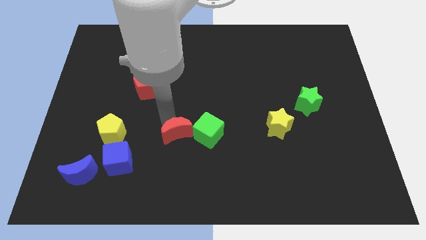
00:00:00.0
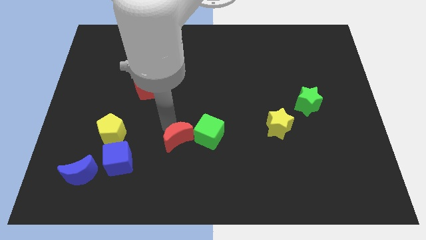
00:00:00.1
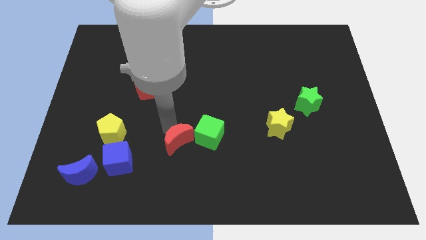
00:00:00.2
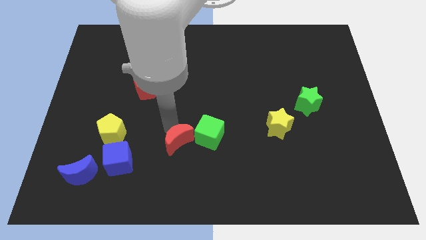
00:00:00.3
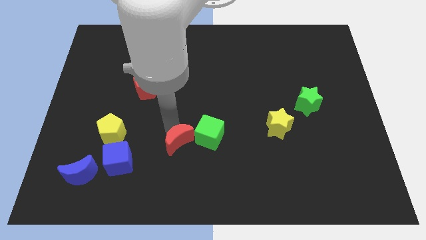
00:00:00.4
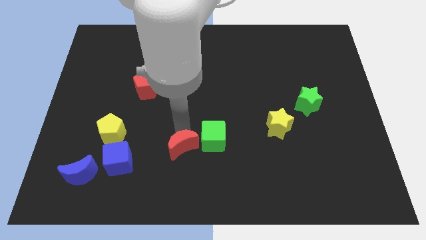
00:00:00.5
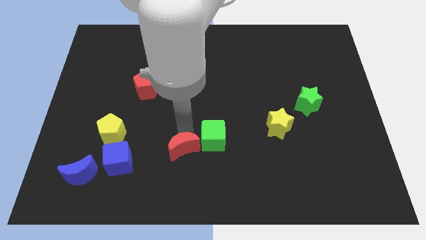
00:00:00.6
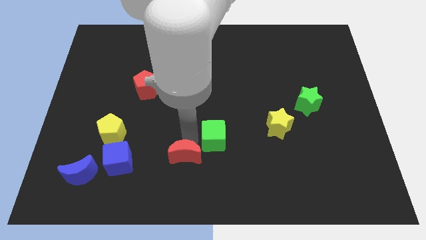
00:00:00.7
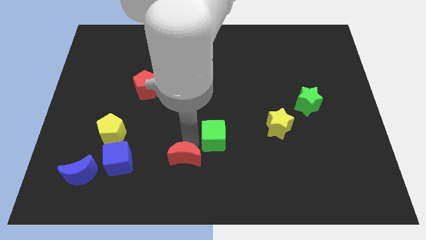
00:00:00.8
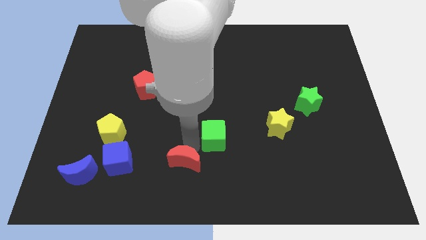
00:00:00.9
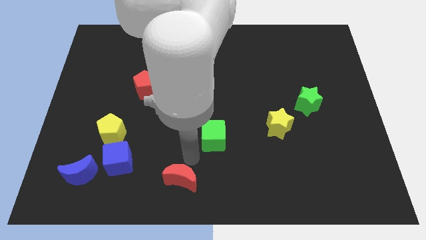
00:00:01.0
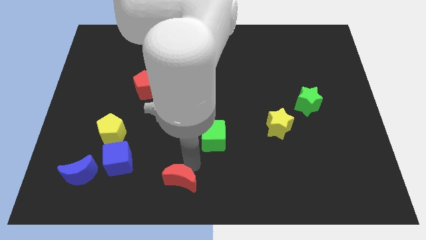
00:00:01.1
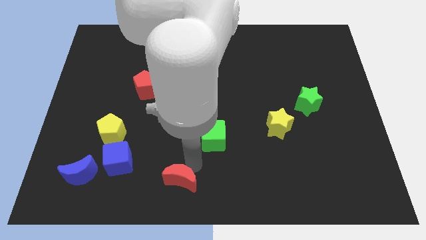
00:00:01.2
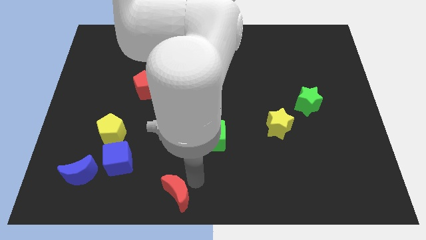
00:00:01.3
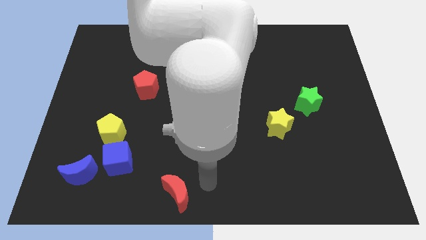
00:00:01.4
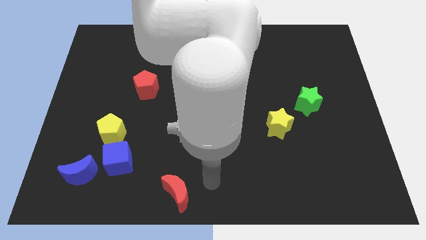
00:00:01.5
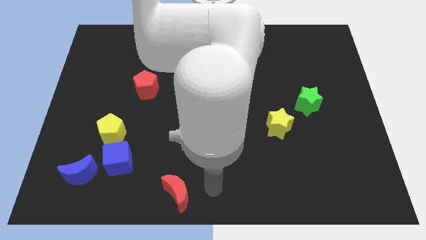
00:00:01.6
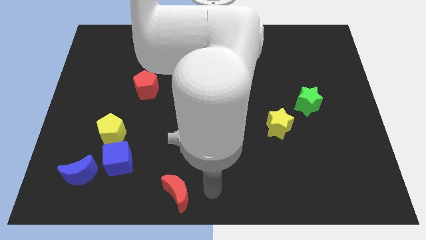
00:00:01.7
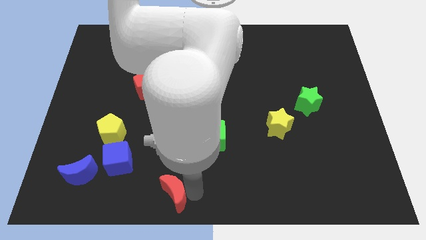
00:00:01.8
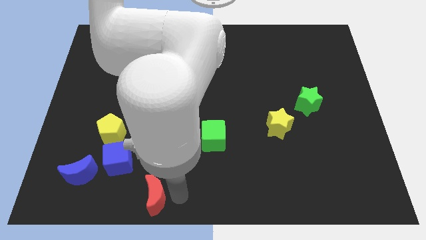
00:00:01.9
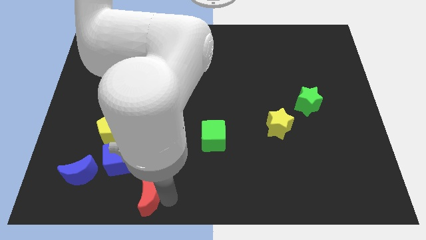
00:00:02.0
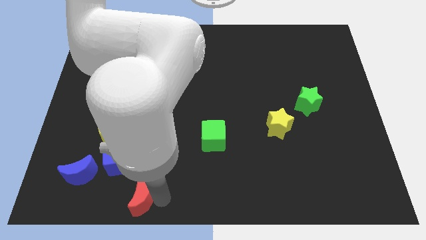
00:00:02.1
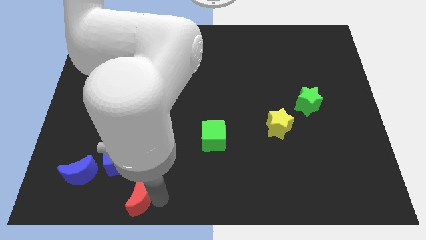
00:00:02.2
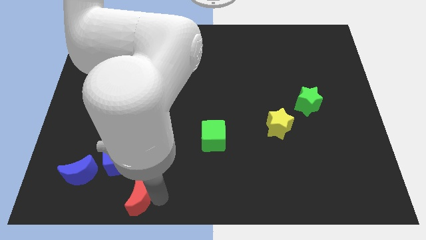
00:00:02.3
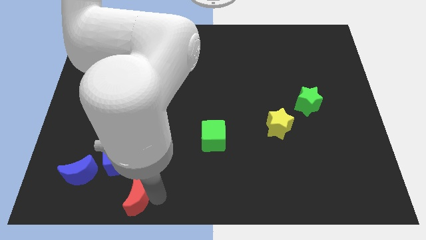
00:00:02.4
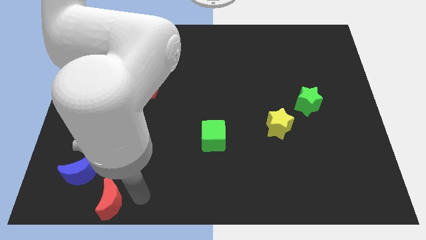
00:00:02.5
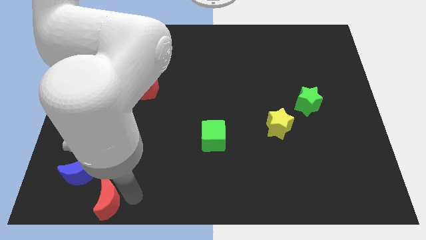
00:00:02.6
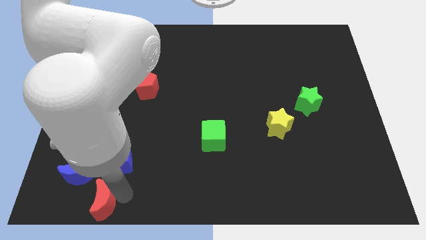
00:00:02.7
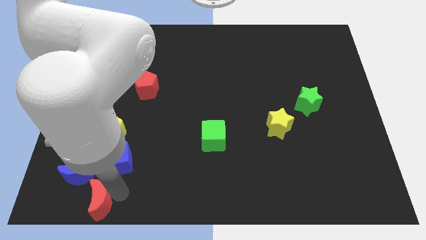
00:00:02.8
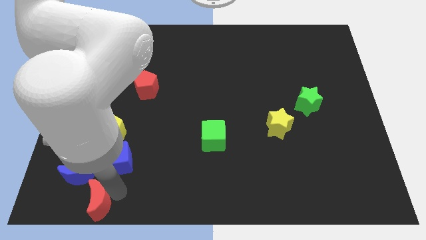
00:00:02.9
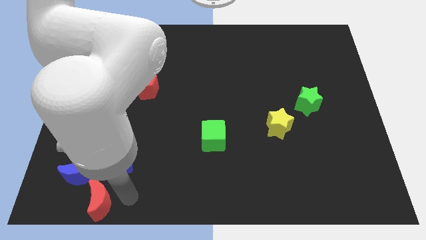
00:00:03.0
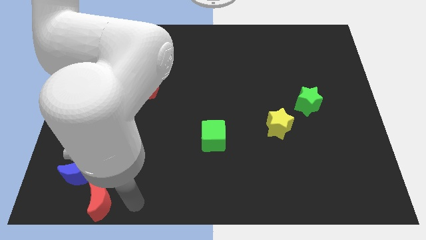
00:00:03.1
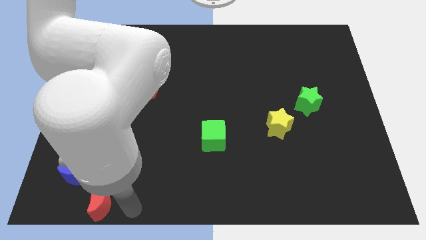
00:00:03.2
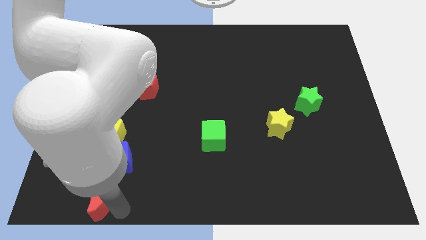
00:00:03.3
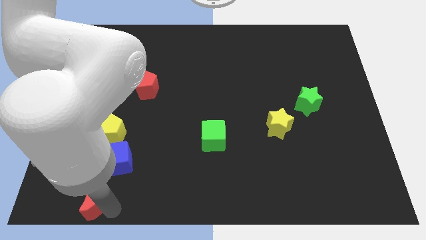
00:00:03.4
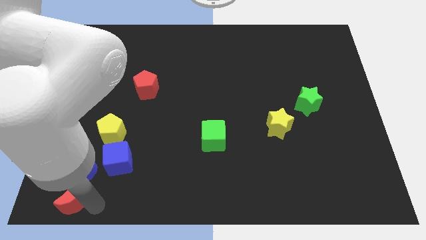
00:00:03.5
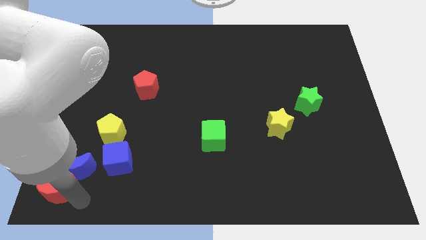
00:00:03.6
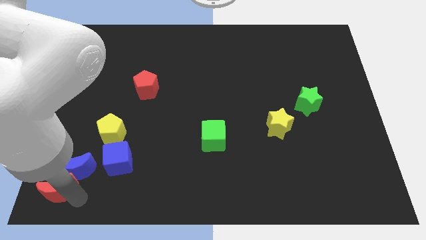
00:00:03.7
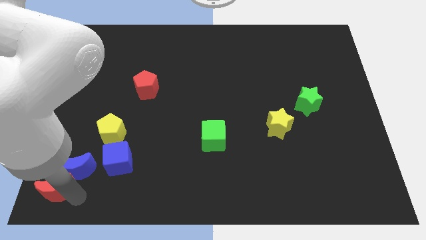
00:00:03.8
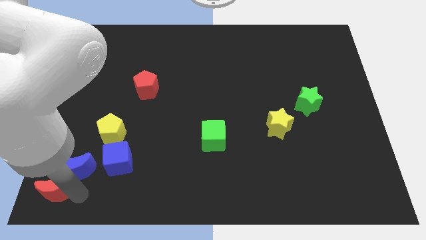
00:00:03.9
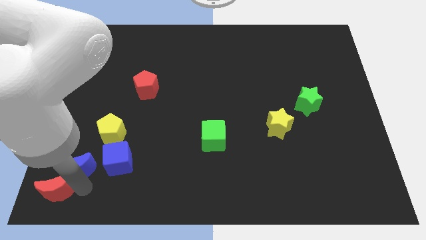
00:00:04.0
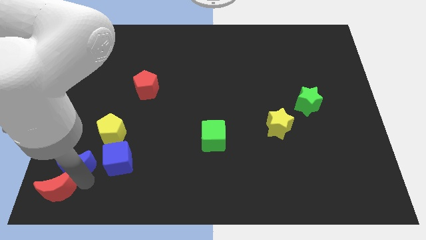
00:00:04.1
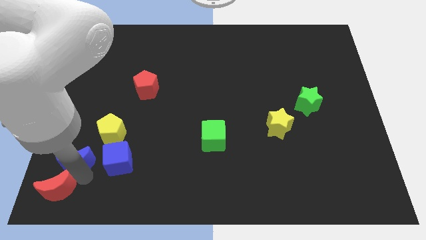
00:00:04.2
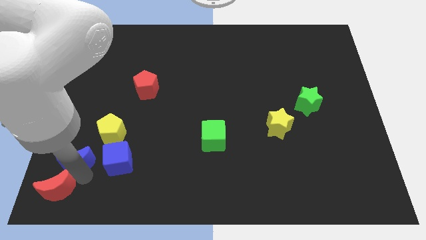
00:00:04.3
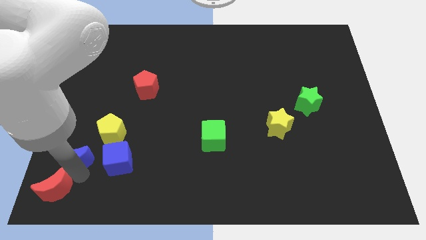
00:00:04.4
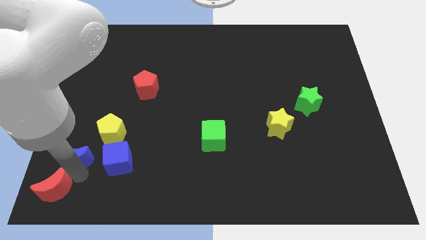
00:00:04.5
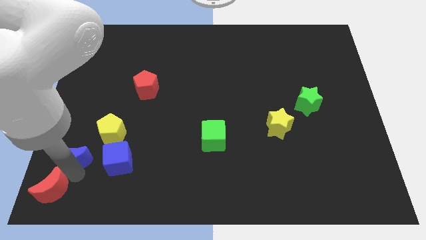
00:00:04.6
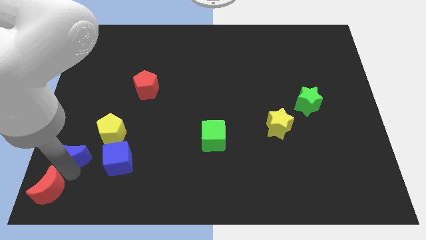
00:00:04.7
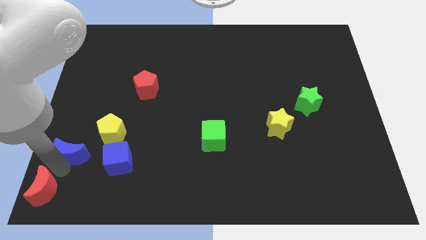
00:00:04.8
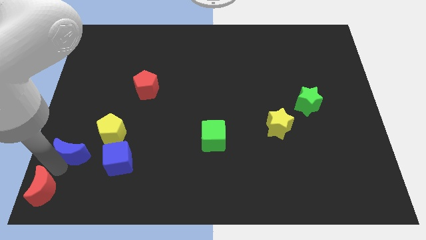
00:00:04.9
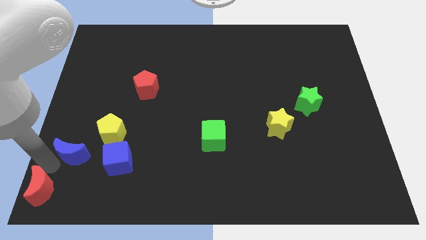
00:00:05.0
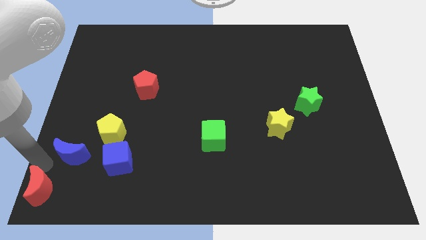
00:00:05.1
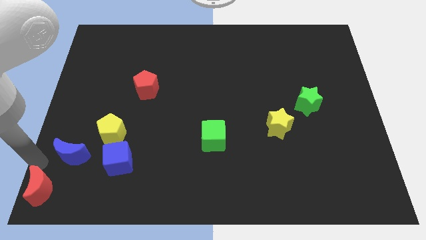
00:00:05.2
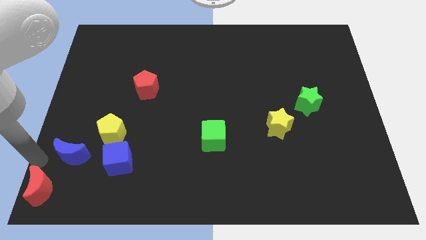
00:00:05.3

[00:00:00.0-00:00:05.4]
move the red moon to the bottom left corner

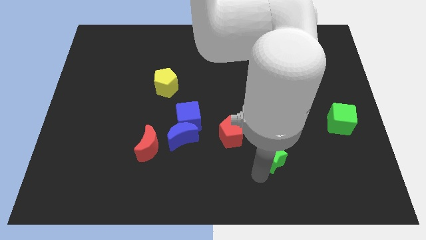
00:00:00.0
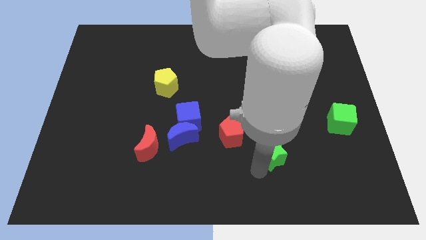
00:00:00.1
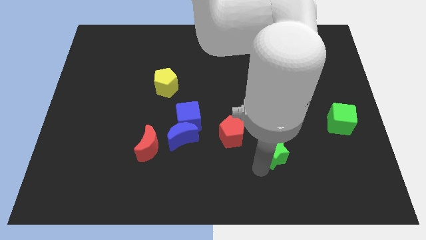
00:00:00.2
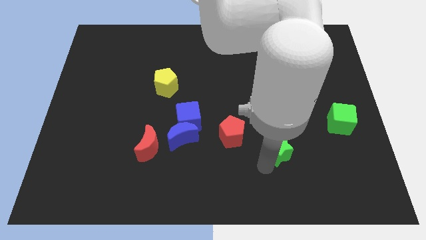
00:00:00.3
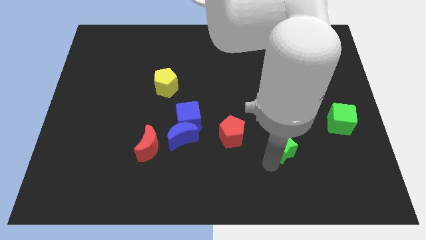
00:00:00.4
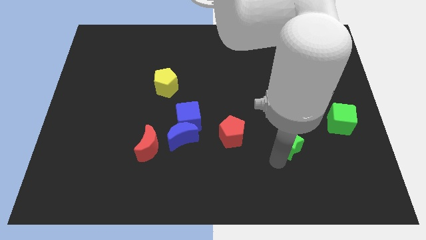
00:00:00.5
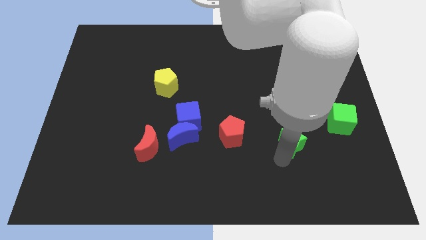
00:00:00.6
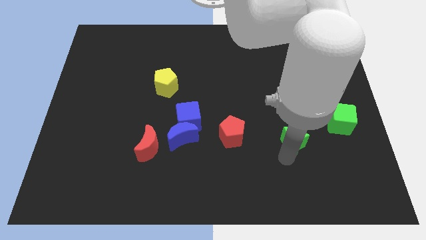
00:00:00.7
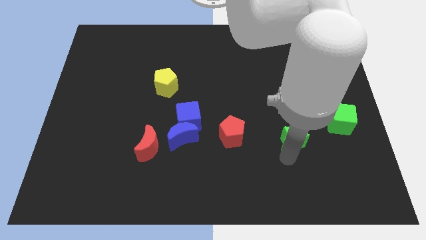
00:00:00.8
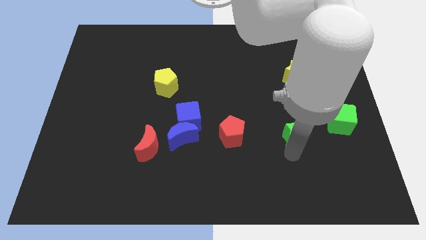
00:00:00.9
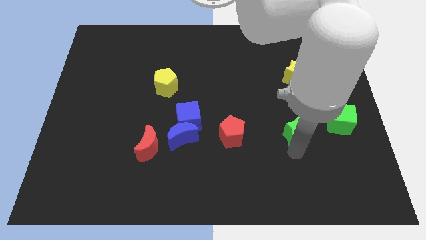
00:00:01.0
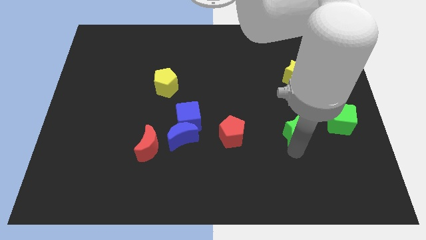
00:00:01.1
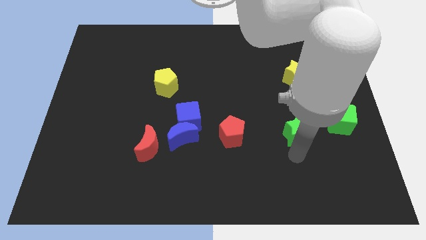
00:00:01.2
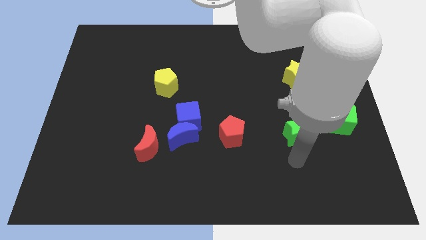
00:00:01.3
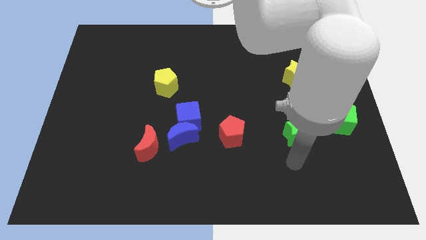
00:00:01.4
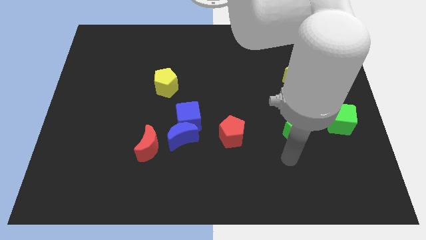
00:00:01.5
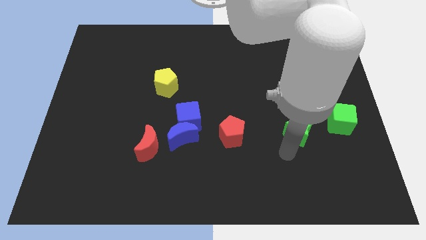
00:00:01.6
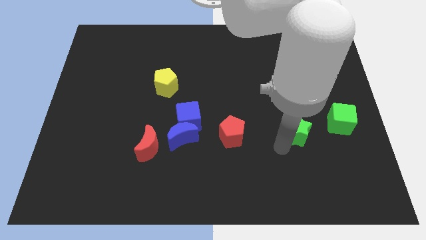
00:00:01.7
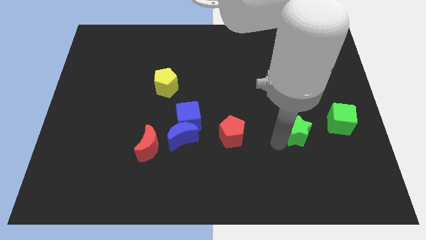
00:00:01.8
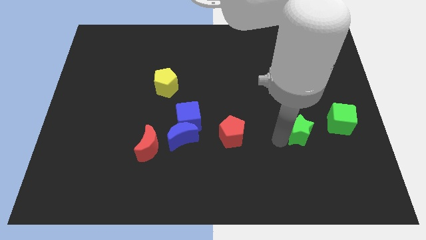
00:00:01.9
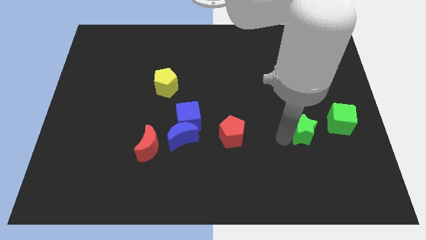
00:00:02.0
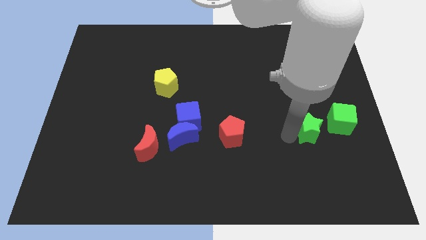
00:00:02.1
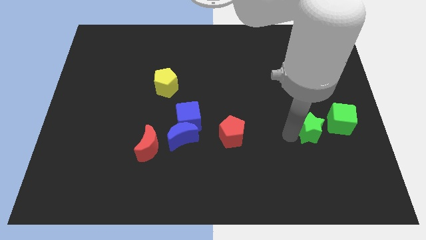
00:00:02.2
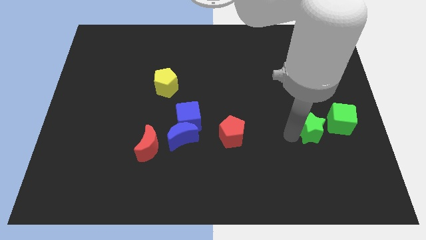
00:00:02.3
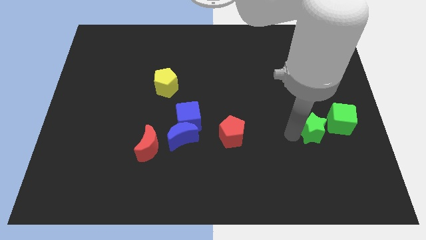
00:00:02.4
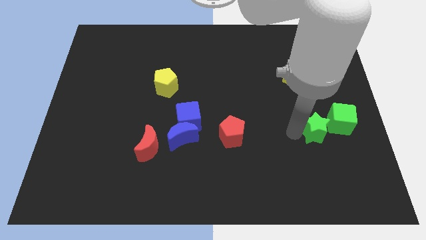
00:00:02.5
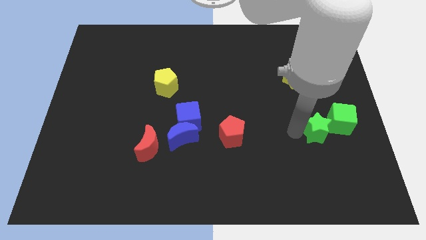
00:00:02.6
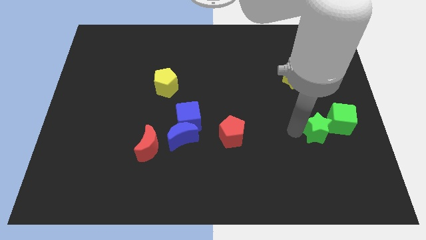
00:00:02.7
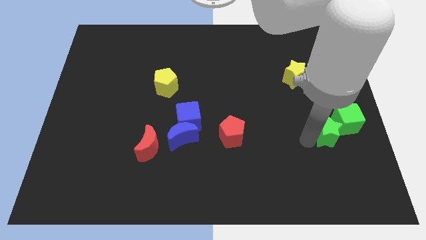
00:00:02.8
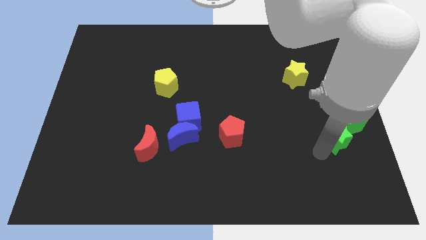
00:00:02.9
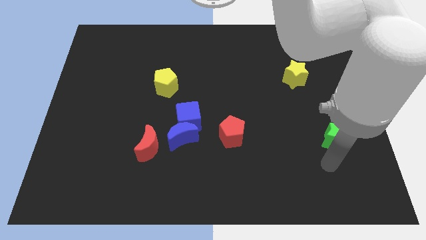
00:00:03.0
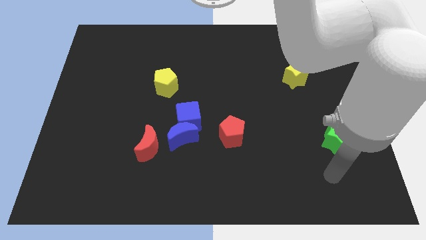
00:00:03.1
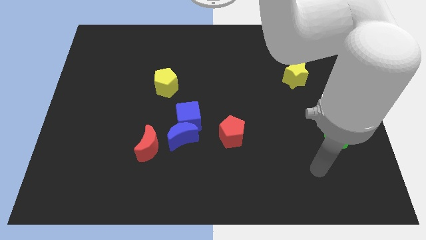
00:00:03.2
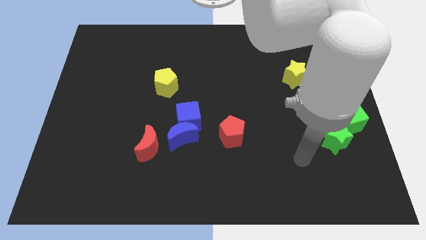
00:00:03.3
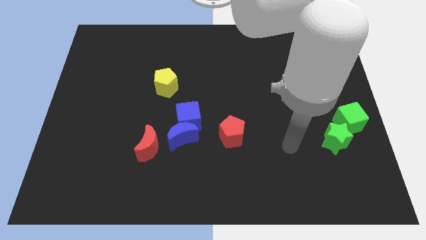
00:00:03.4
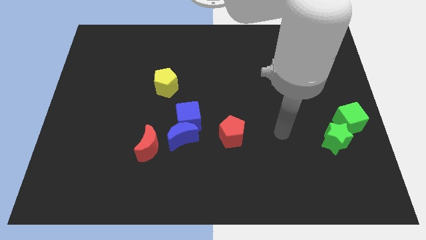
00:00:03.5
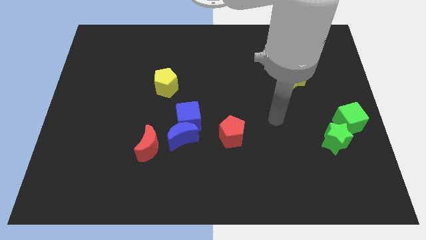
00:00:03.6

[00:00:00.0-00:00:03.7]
move the green star to the bottom left of the green cube
